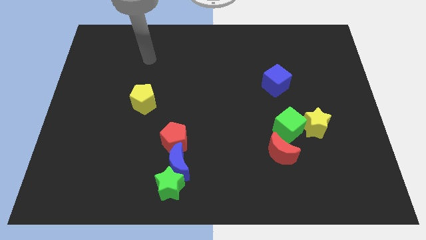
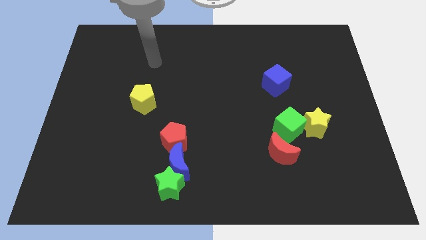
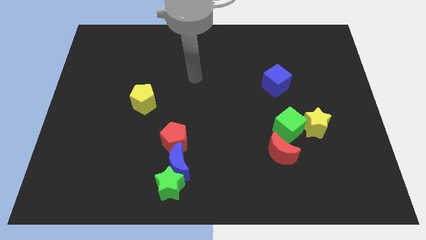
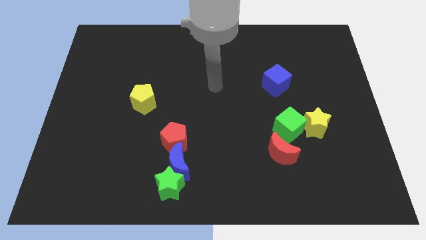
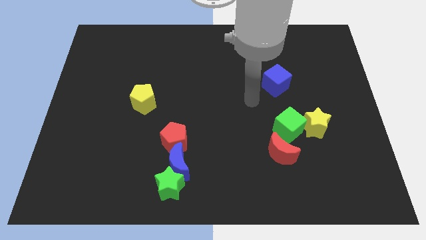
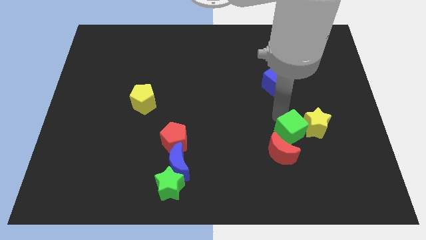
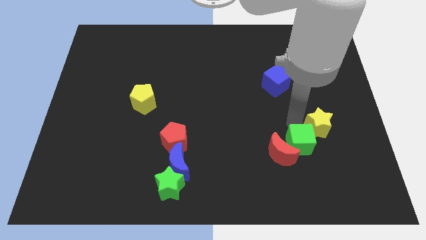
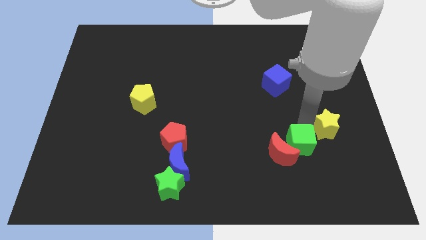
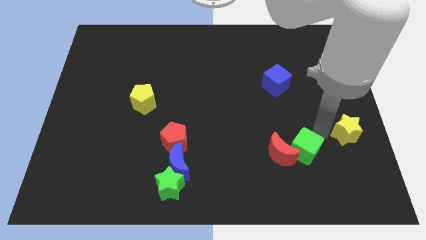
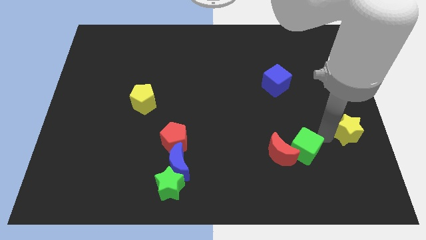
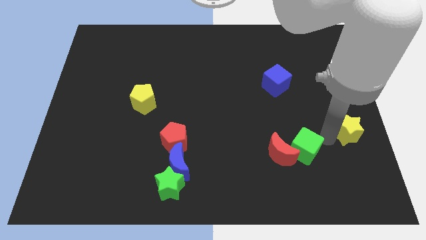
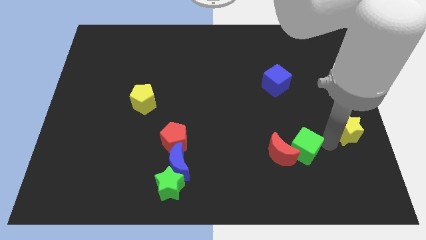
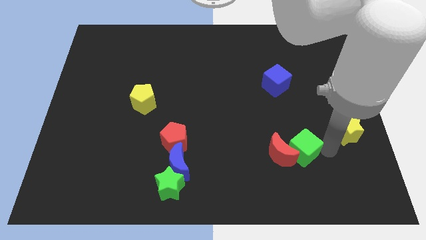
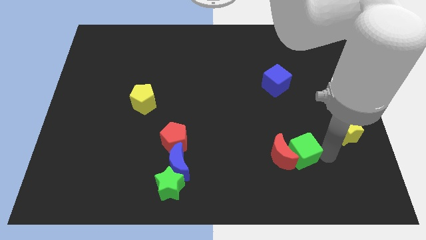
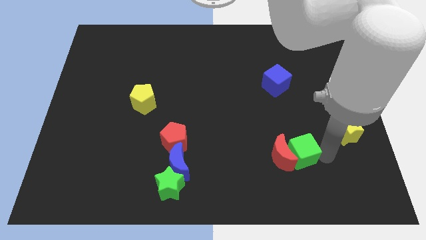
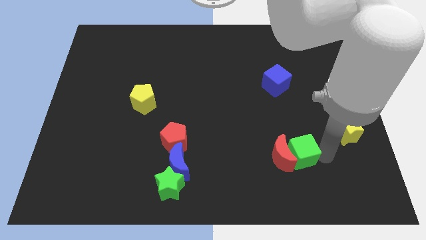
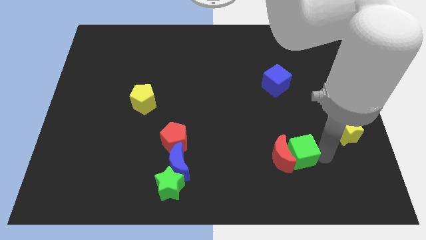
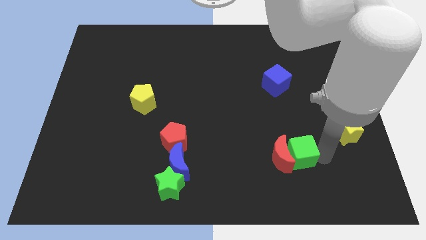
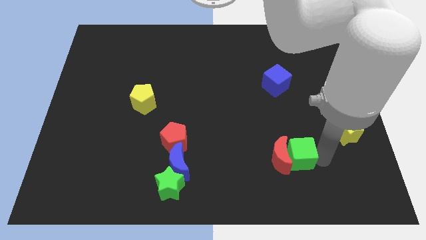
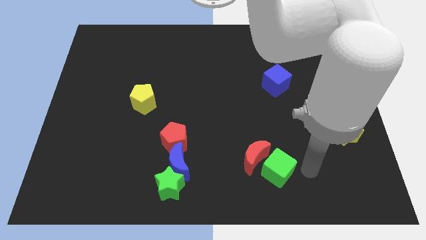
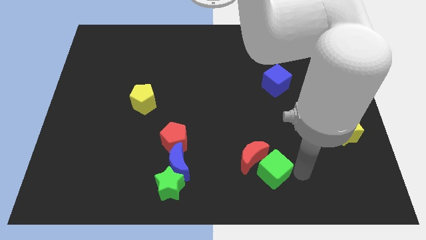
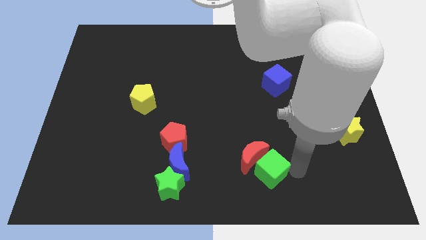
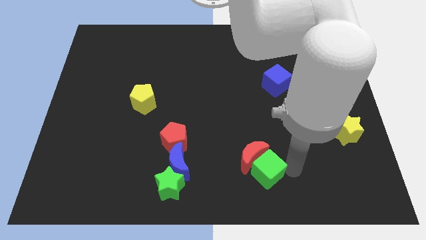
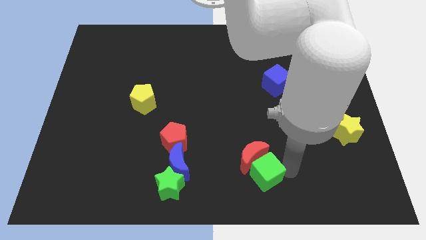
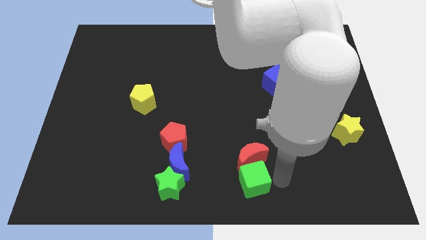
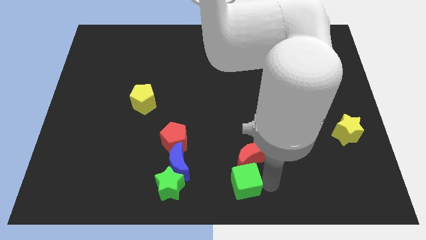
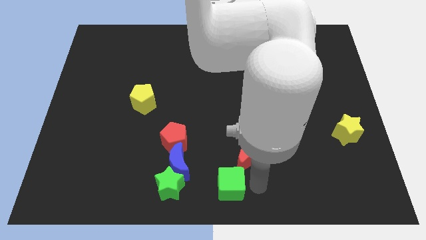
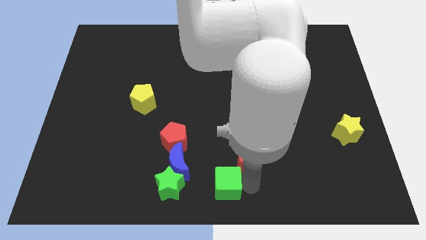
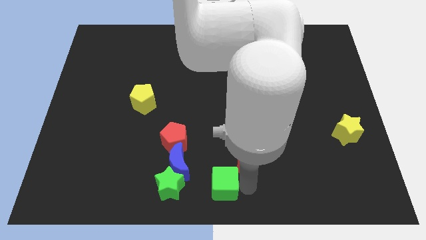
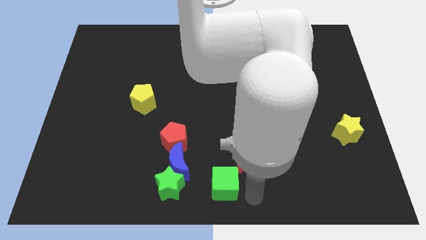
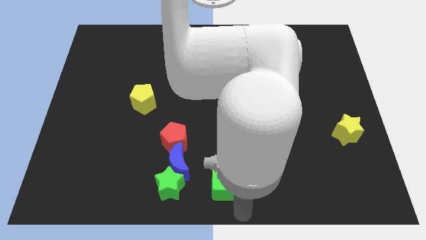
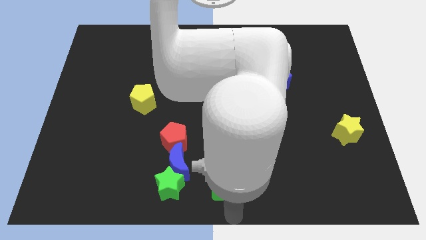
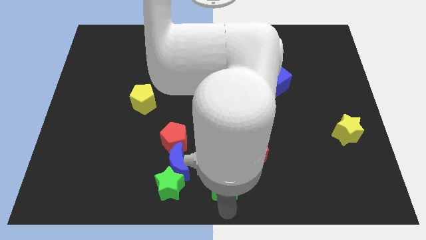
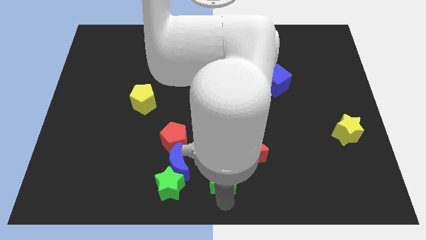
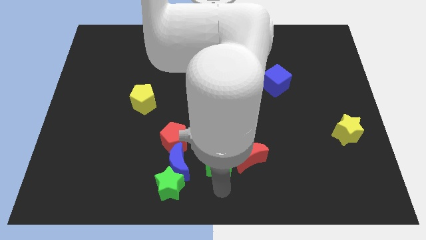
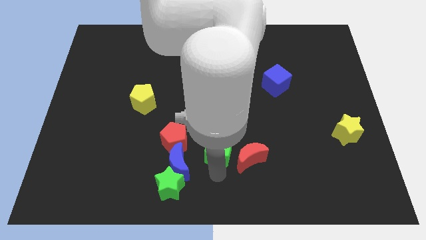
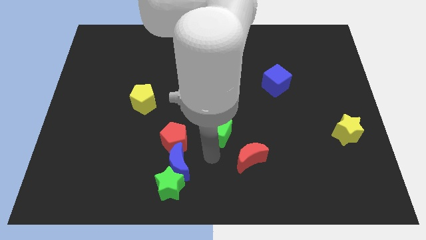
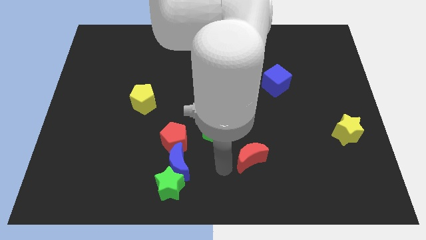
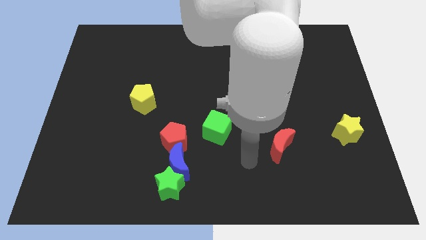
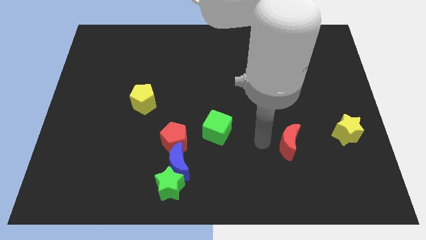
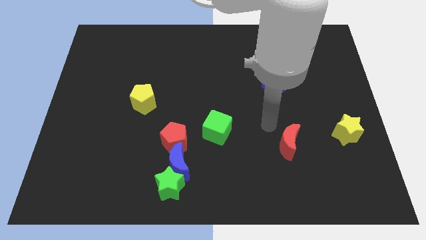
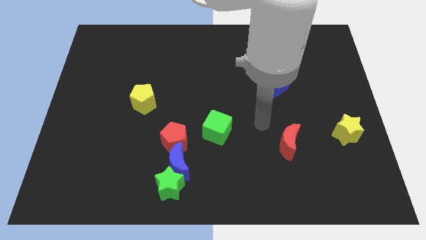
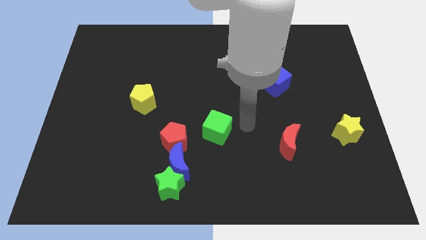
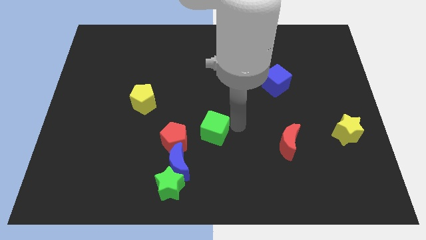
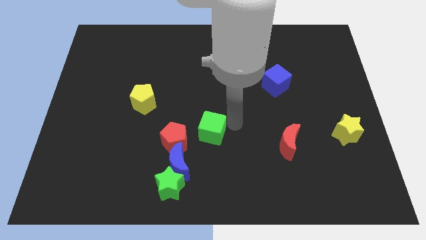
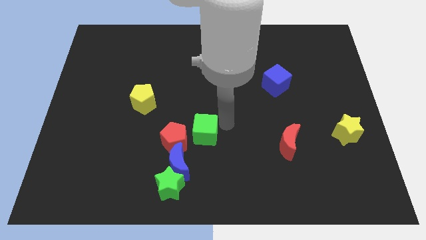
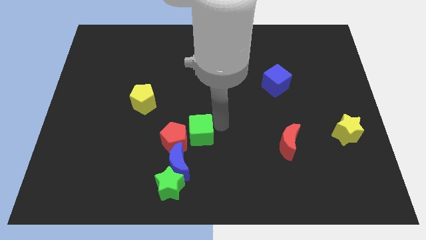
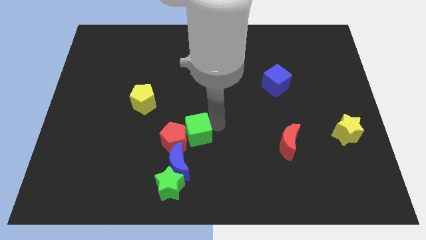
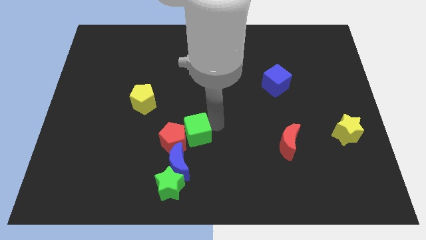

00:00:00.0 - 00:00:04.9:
put the green cube close to the red pentagon

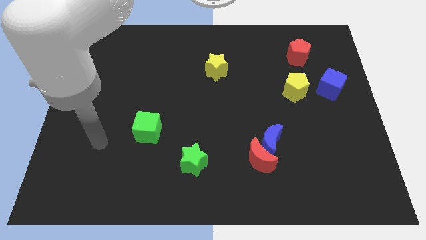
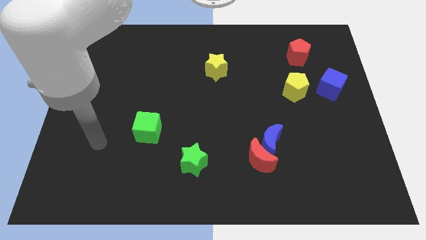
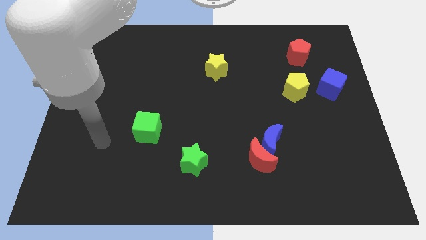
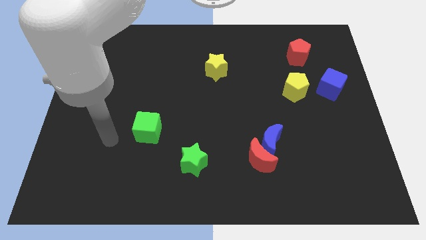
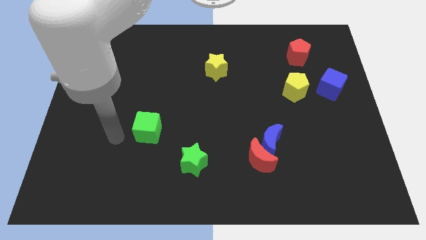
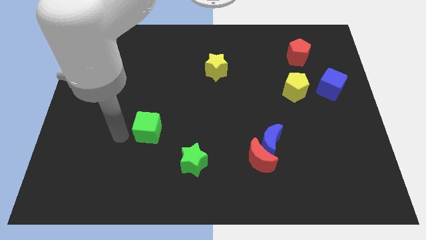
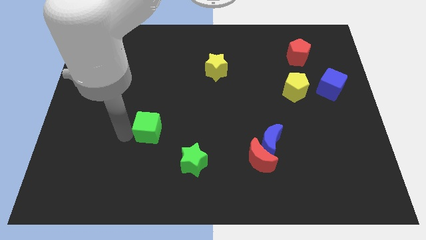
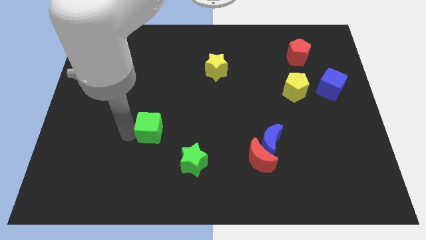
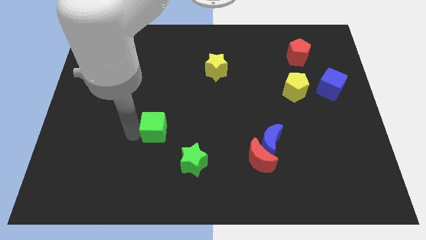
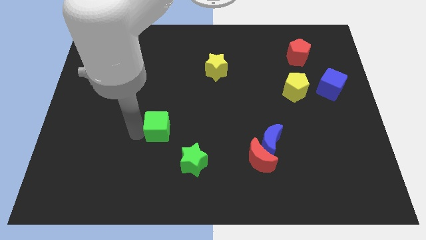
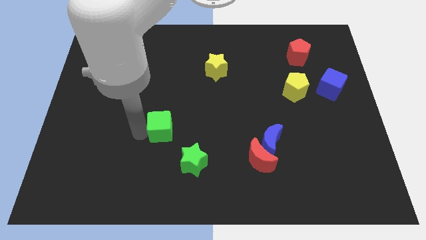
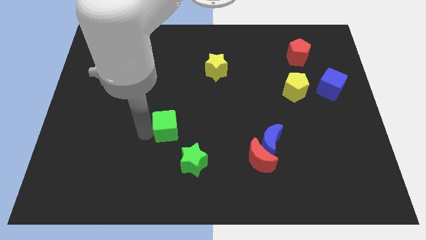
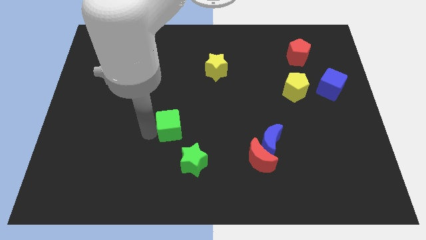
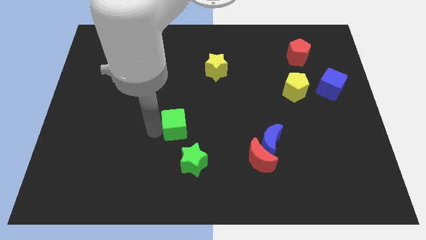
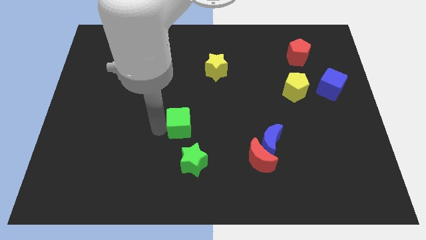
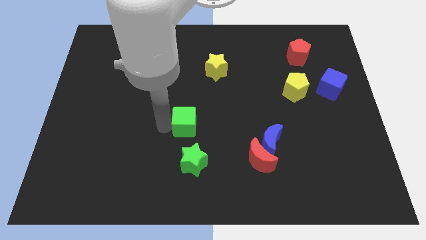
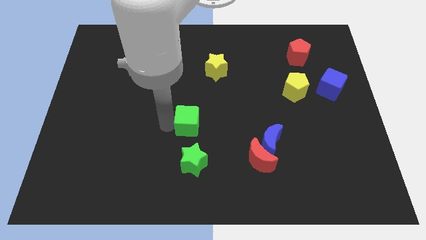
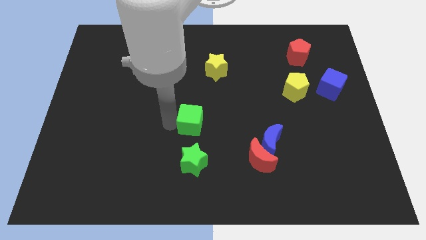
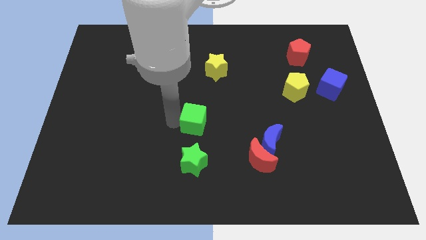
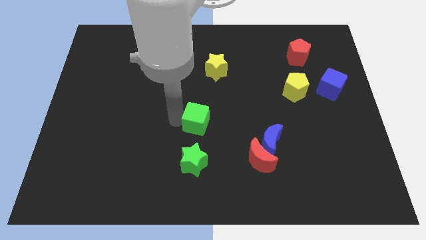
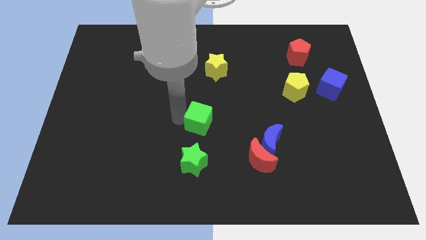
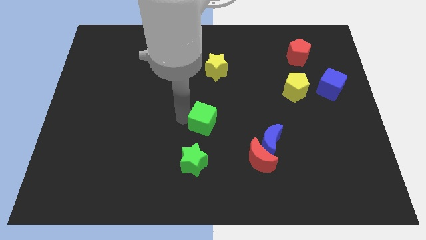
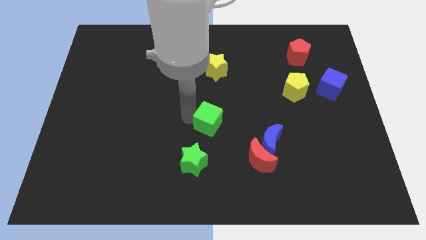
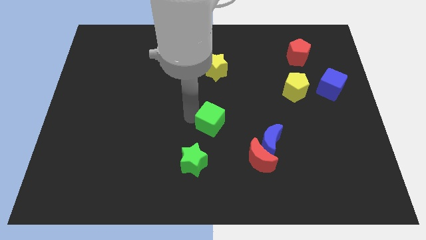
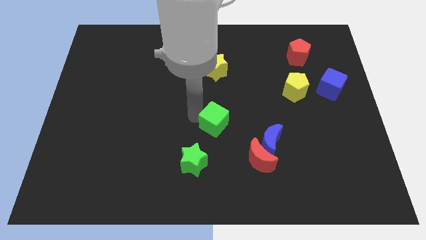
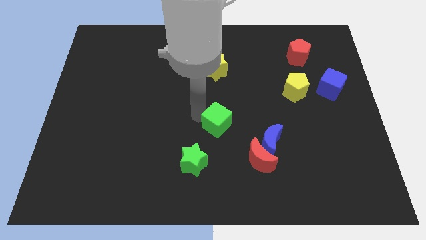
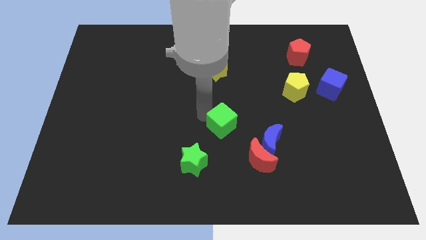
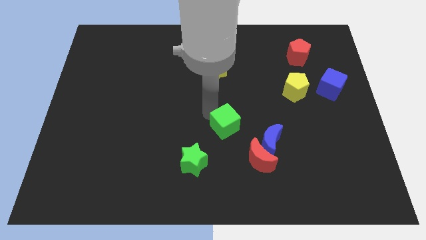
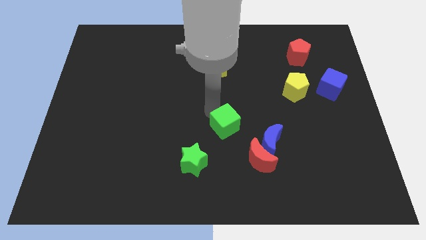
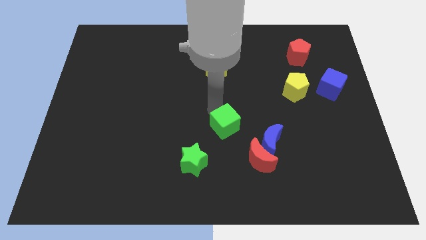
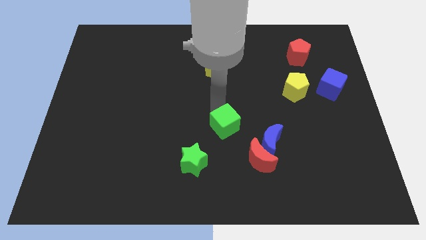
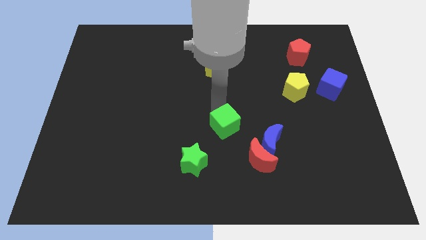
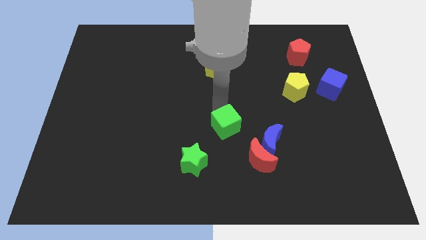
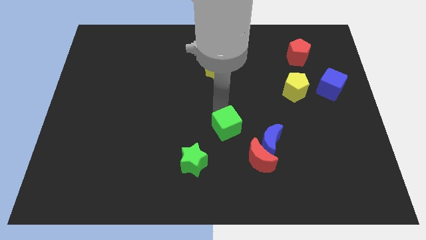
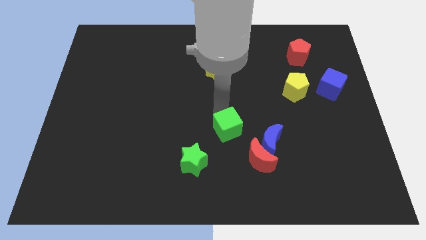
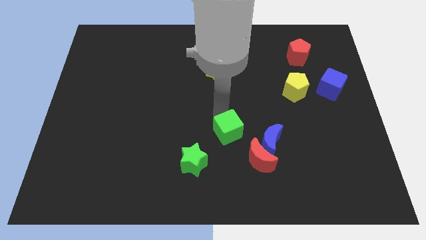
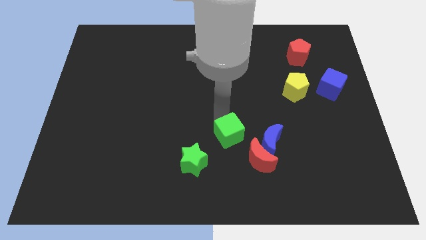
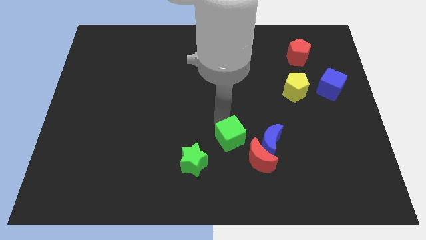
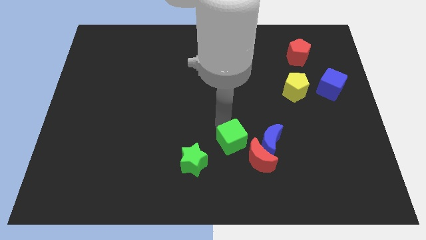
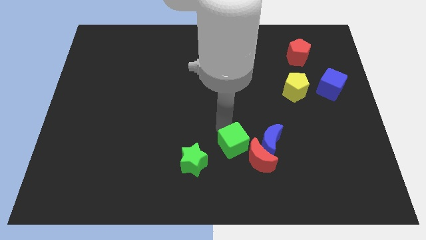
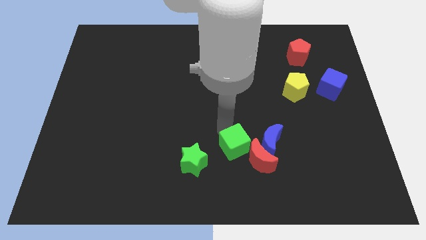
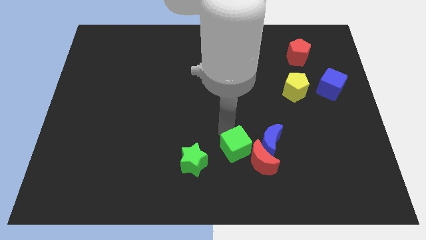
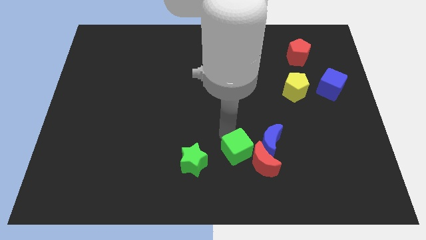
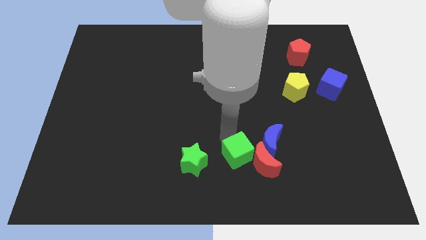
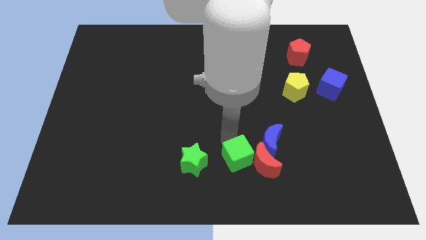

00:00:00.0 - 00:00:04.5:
push the green cube to the red moon
